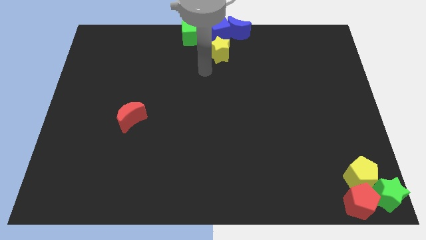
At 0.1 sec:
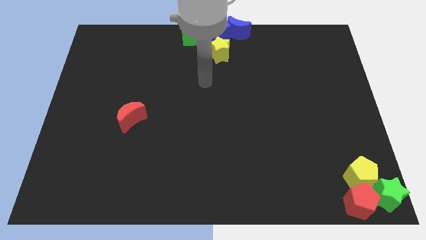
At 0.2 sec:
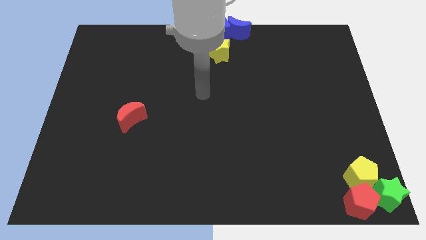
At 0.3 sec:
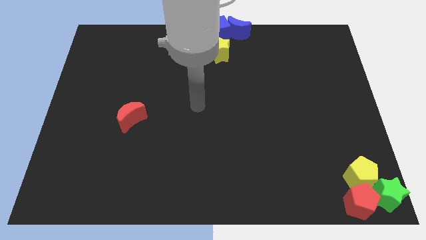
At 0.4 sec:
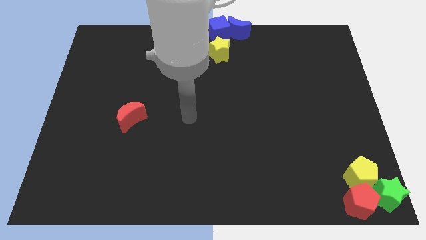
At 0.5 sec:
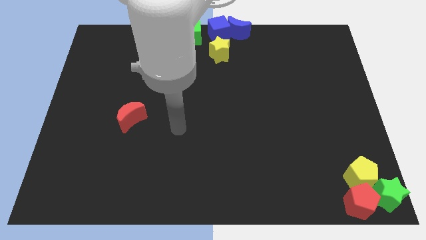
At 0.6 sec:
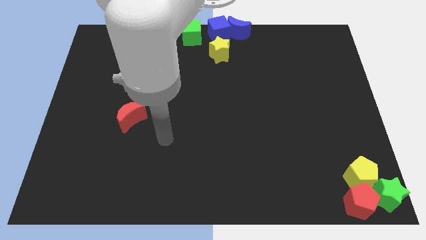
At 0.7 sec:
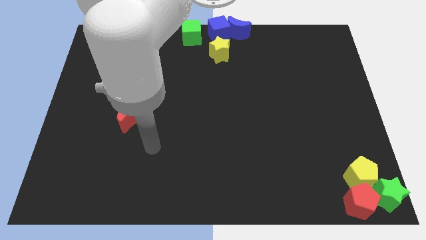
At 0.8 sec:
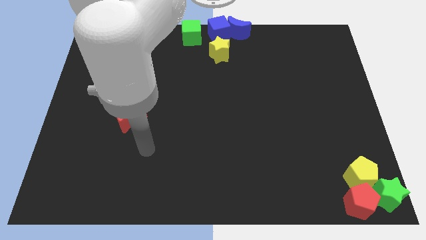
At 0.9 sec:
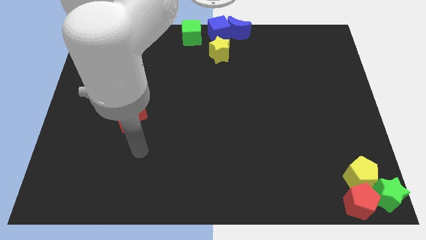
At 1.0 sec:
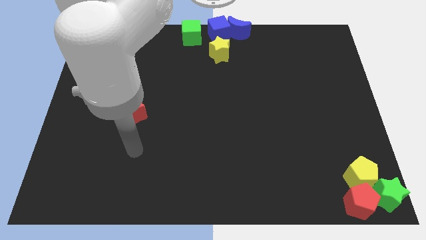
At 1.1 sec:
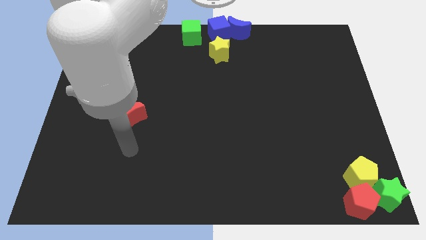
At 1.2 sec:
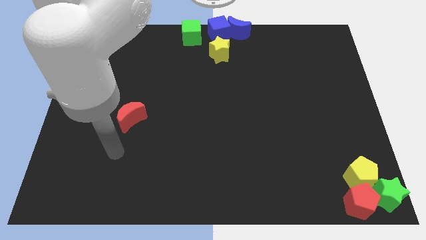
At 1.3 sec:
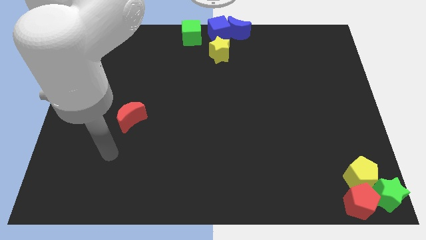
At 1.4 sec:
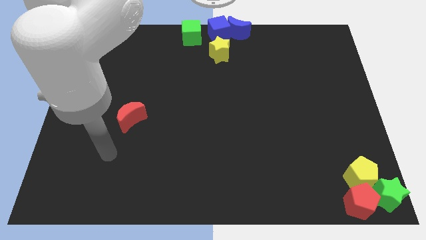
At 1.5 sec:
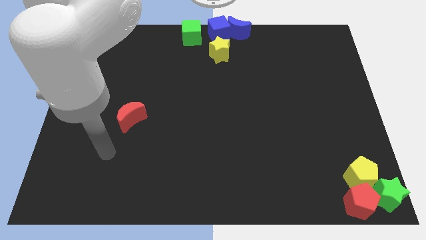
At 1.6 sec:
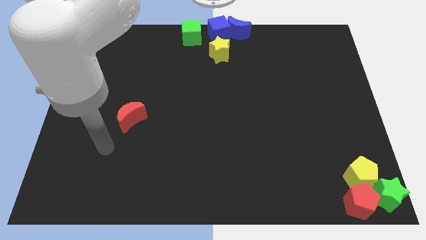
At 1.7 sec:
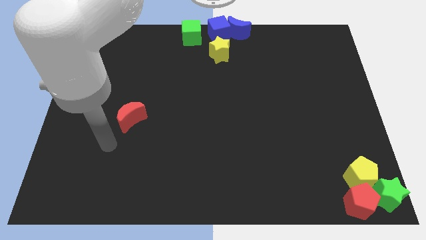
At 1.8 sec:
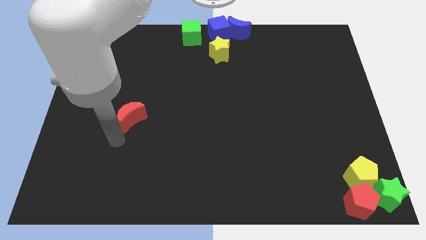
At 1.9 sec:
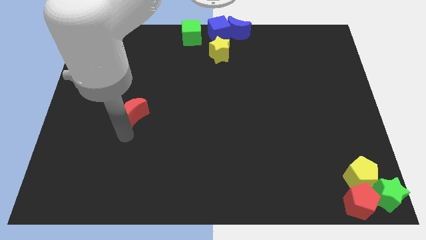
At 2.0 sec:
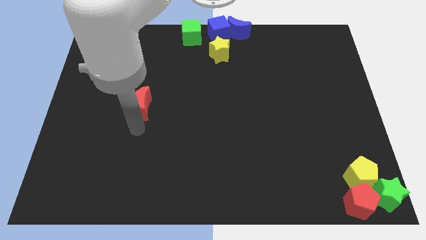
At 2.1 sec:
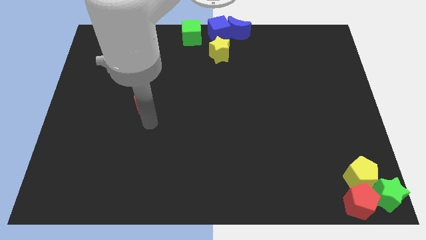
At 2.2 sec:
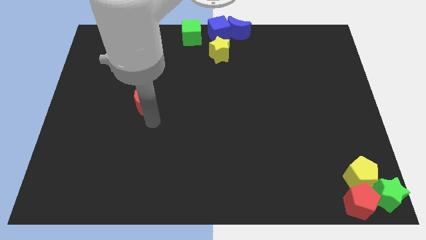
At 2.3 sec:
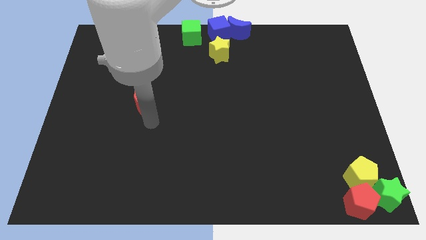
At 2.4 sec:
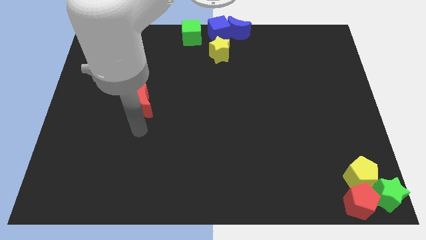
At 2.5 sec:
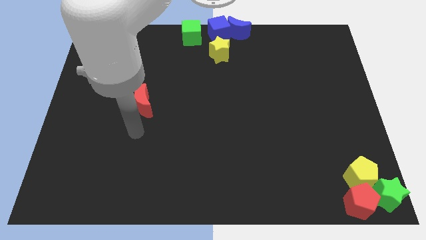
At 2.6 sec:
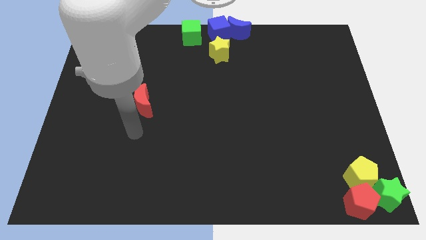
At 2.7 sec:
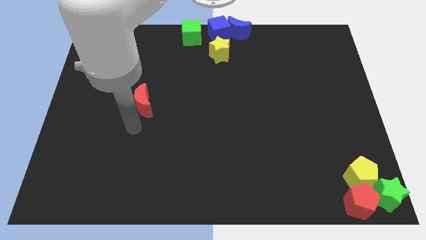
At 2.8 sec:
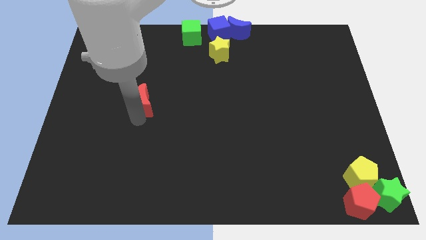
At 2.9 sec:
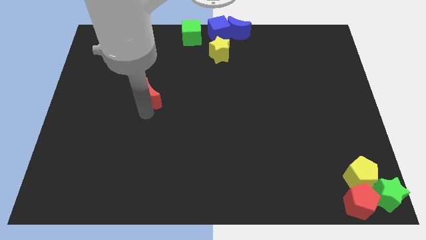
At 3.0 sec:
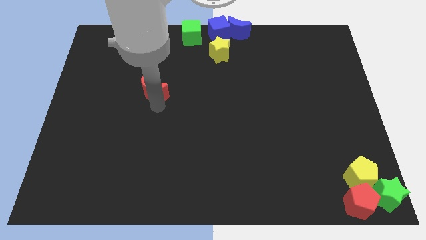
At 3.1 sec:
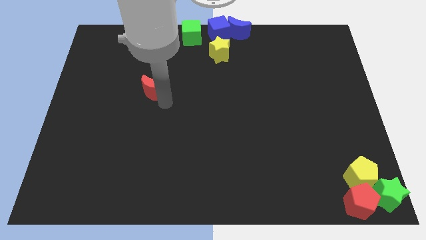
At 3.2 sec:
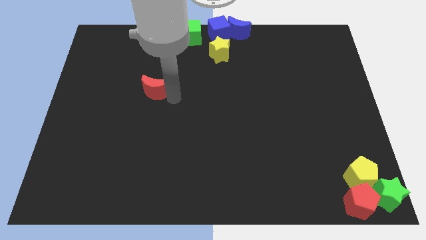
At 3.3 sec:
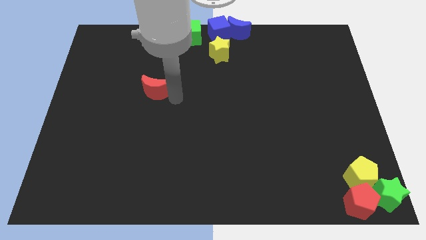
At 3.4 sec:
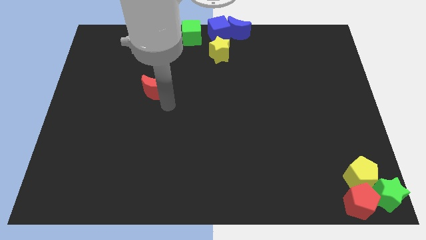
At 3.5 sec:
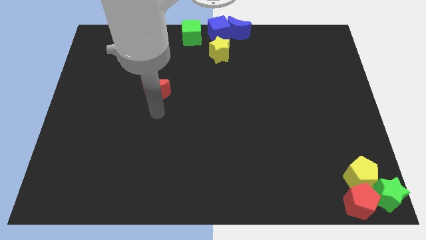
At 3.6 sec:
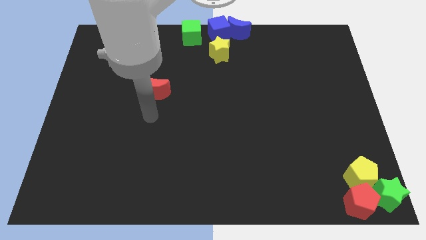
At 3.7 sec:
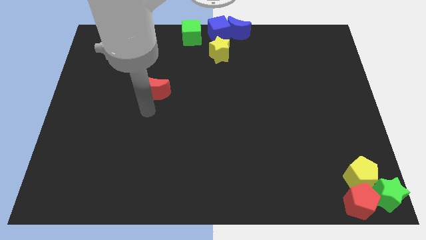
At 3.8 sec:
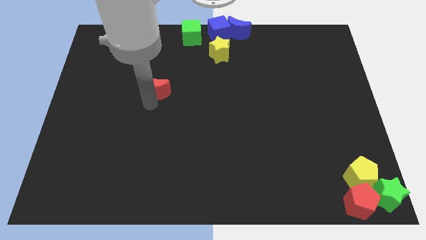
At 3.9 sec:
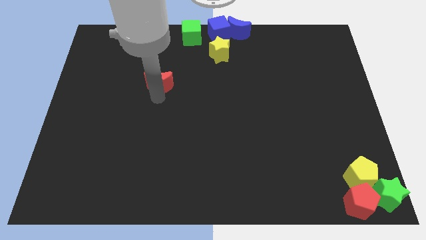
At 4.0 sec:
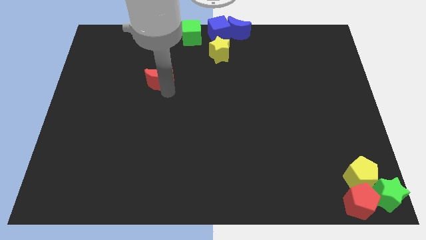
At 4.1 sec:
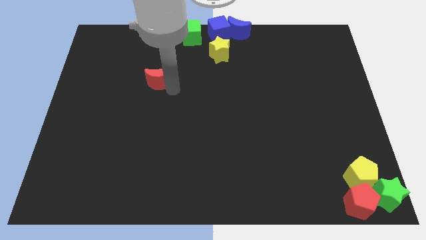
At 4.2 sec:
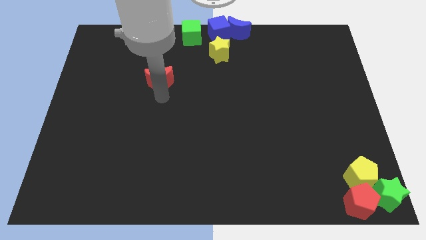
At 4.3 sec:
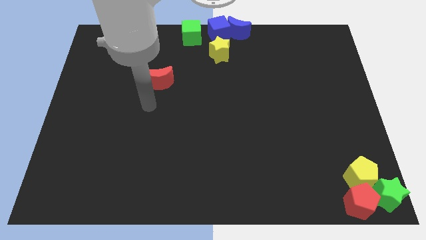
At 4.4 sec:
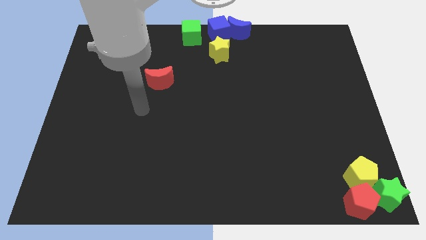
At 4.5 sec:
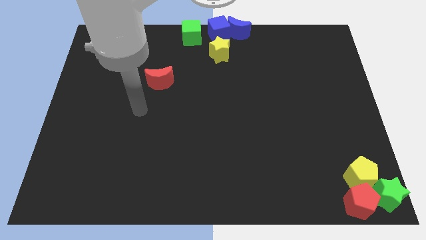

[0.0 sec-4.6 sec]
place the red moon diagonally to the bottom left of the yellow star

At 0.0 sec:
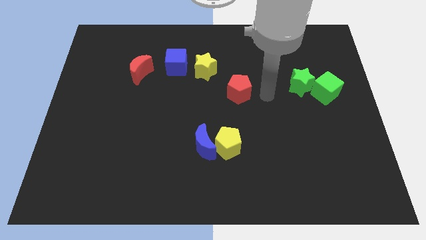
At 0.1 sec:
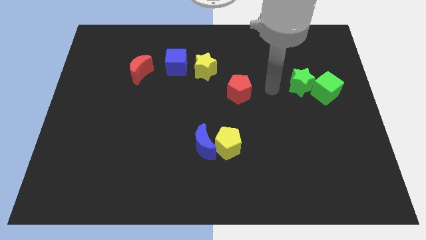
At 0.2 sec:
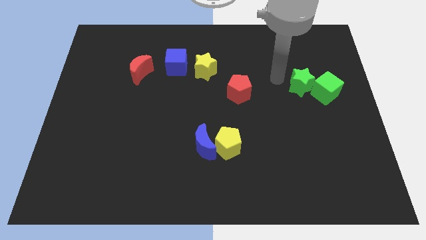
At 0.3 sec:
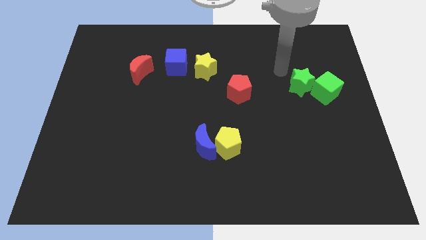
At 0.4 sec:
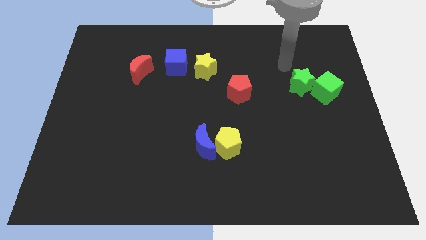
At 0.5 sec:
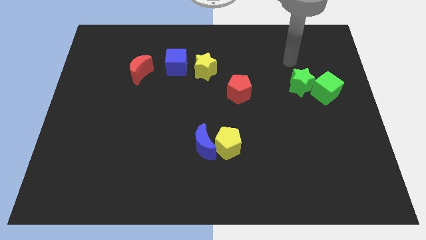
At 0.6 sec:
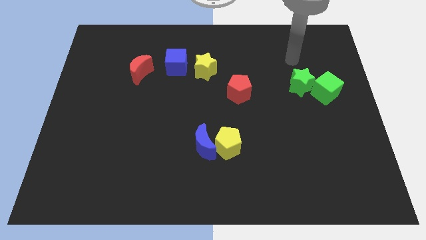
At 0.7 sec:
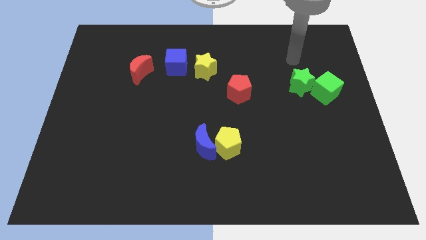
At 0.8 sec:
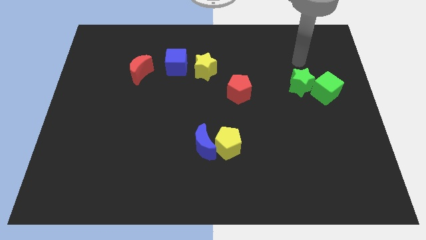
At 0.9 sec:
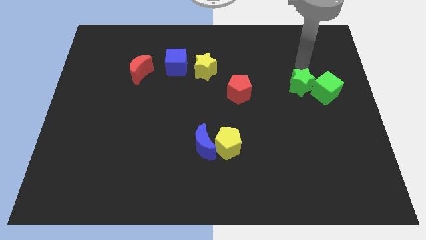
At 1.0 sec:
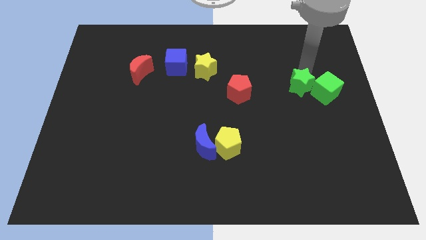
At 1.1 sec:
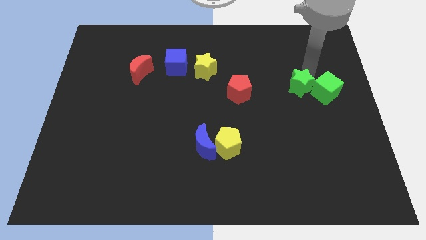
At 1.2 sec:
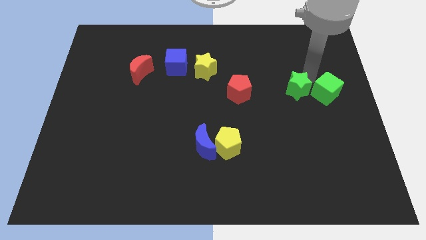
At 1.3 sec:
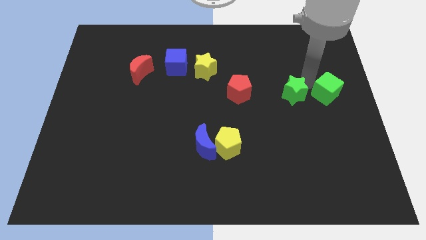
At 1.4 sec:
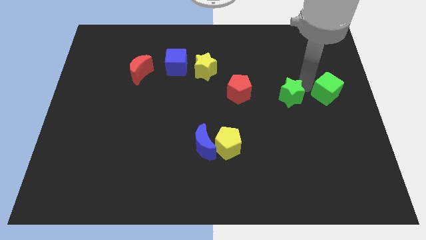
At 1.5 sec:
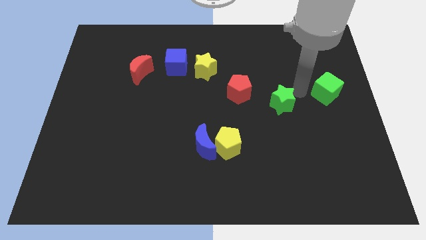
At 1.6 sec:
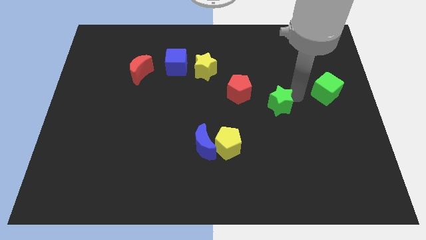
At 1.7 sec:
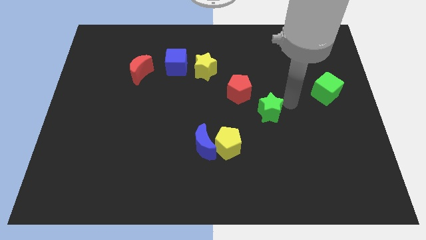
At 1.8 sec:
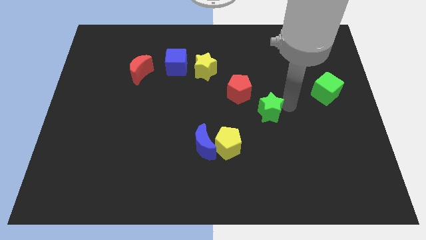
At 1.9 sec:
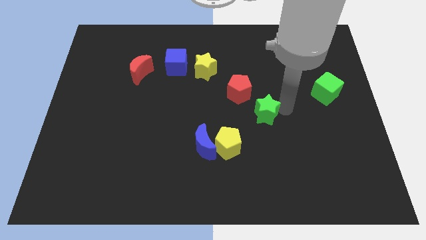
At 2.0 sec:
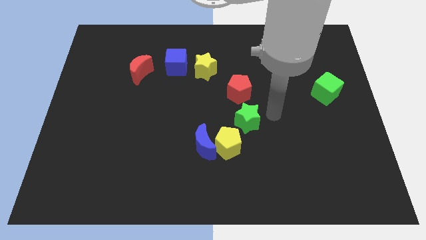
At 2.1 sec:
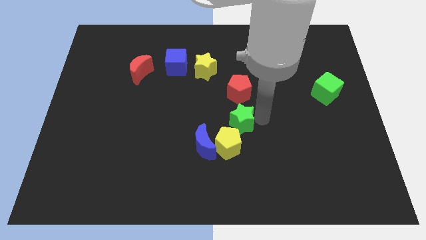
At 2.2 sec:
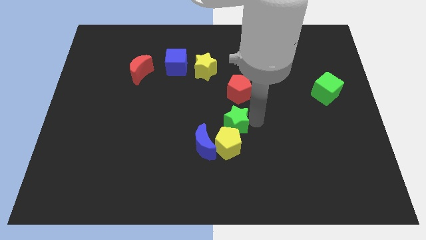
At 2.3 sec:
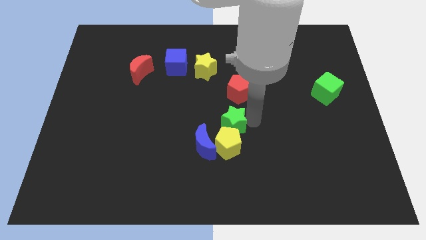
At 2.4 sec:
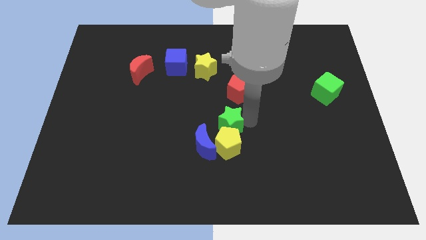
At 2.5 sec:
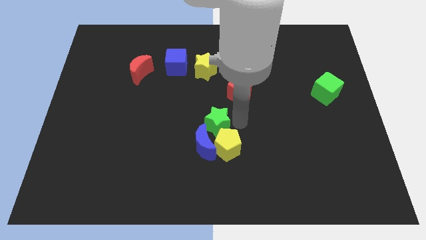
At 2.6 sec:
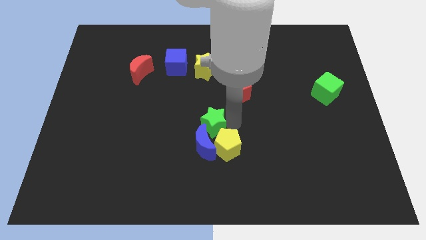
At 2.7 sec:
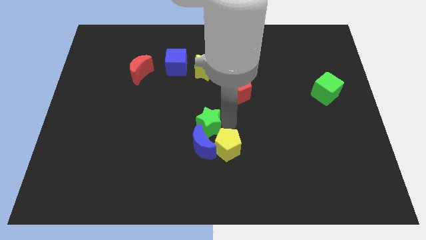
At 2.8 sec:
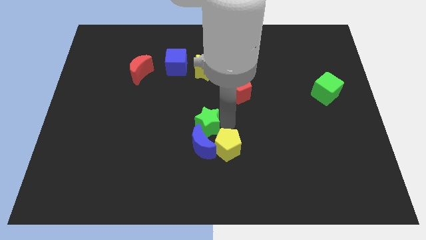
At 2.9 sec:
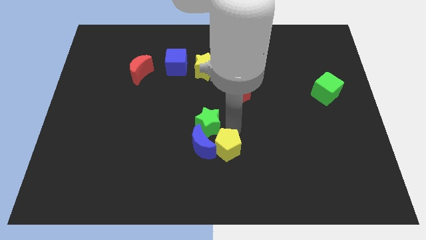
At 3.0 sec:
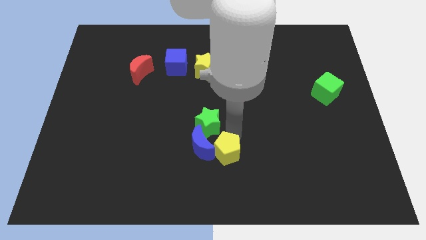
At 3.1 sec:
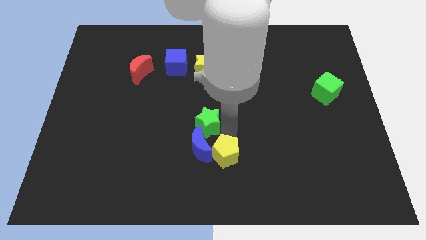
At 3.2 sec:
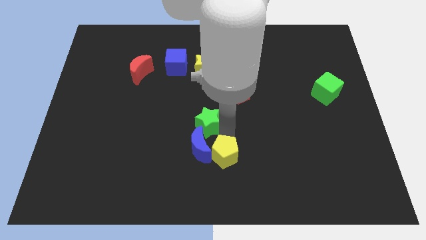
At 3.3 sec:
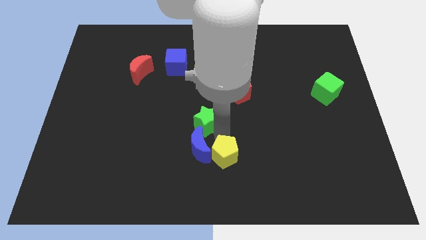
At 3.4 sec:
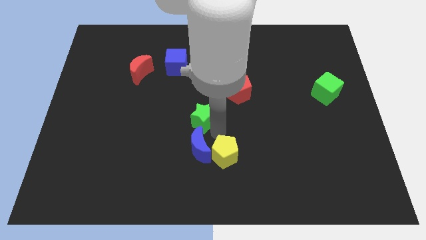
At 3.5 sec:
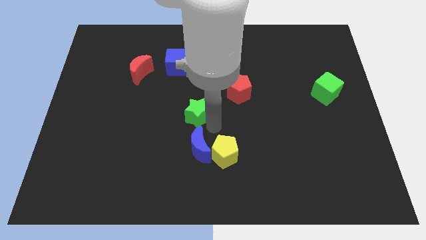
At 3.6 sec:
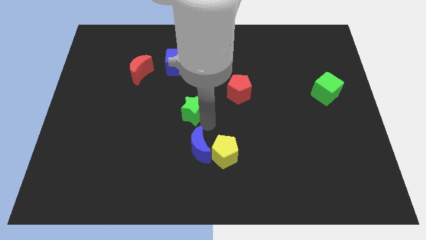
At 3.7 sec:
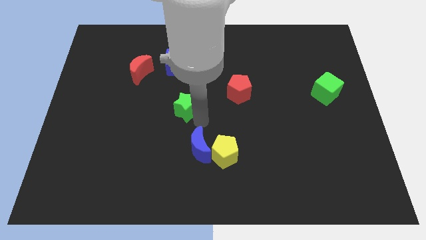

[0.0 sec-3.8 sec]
separate the green star and green cube

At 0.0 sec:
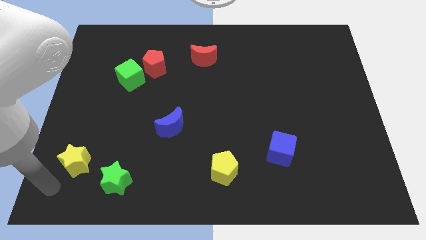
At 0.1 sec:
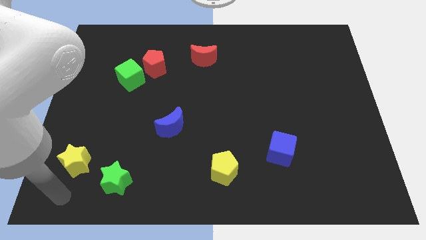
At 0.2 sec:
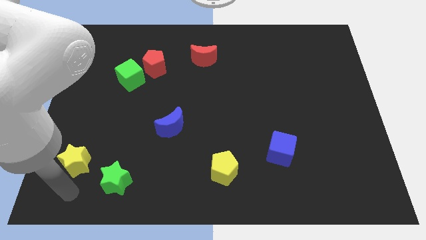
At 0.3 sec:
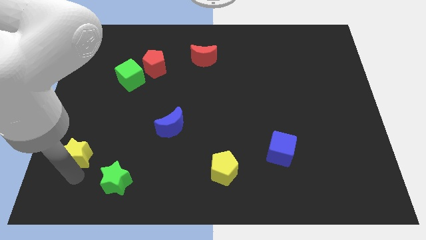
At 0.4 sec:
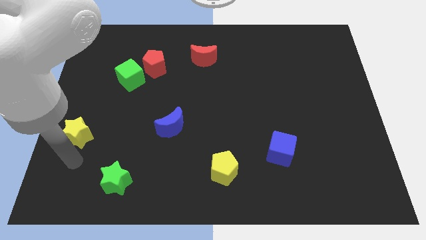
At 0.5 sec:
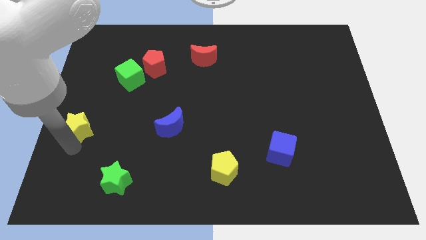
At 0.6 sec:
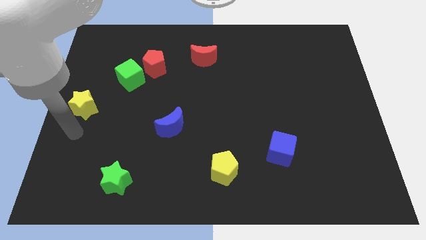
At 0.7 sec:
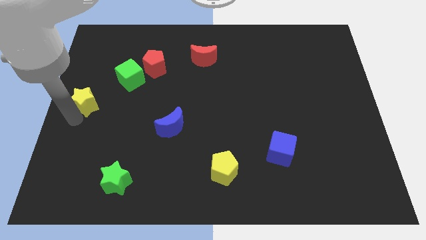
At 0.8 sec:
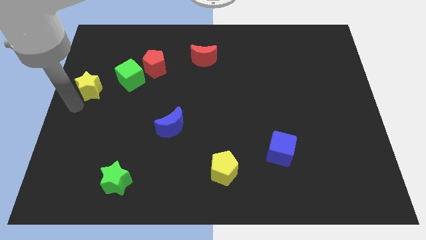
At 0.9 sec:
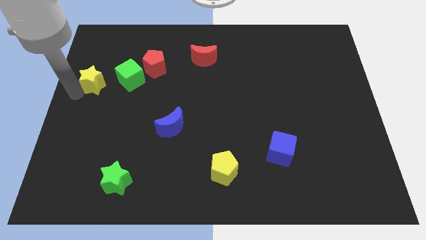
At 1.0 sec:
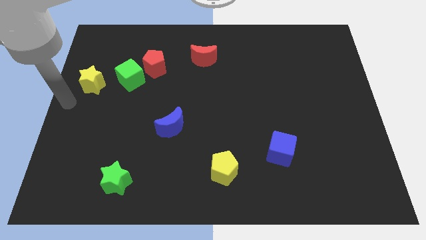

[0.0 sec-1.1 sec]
place the yellow star to the left side of the green cube
